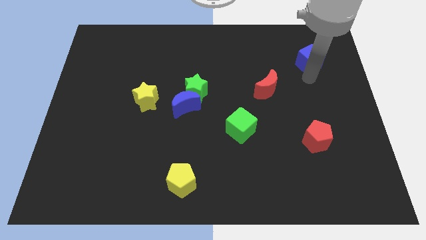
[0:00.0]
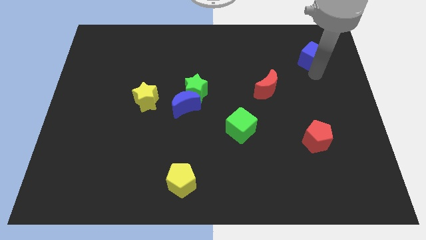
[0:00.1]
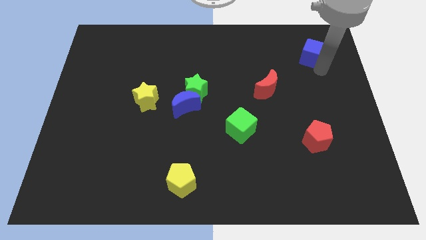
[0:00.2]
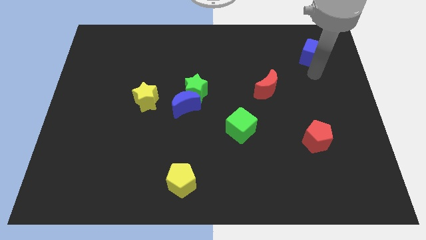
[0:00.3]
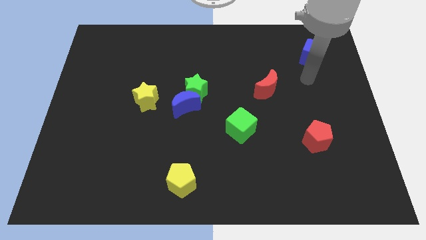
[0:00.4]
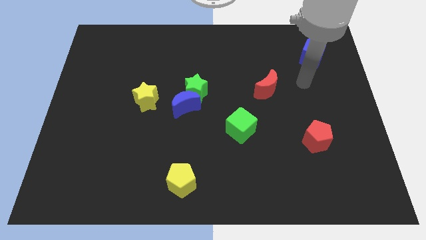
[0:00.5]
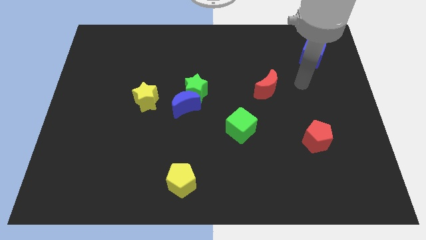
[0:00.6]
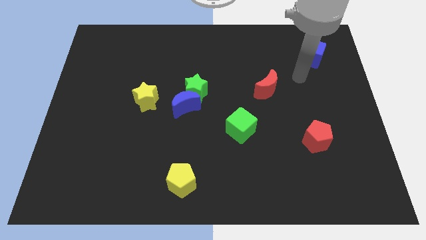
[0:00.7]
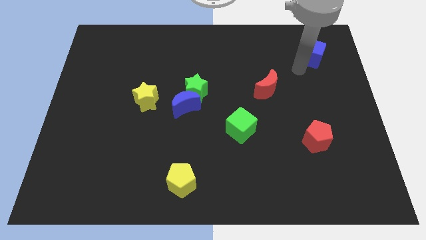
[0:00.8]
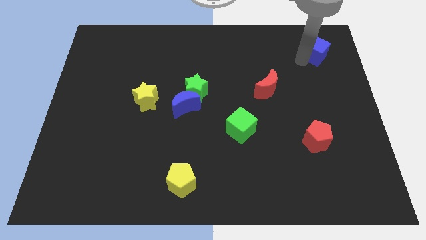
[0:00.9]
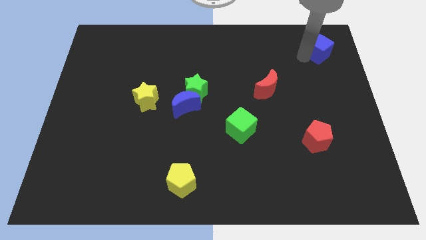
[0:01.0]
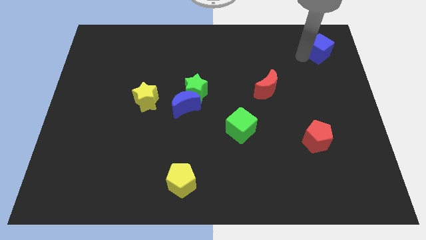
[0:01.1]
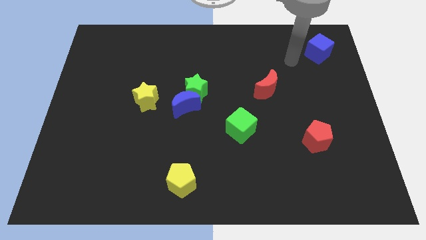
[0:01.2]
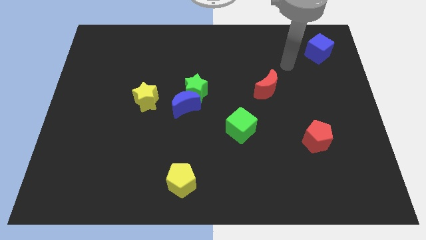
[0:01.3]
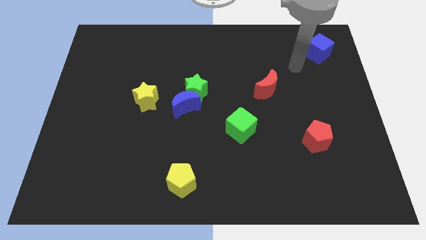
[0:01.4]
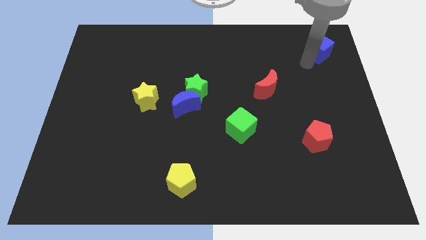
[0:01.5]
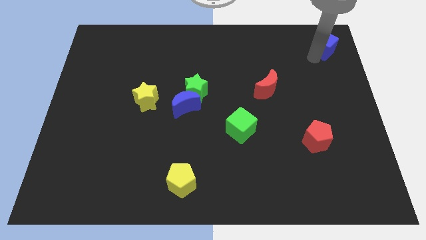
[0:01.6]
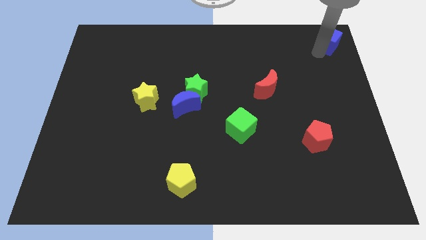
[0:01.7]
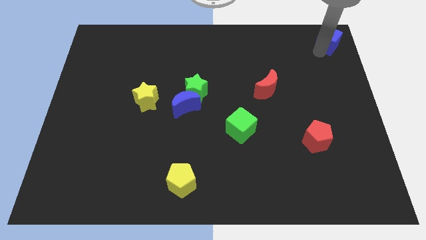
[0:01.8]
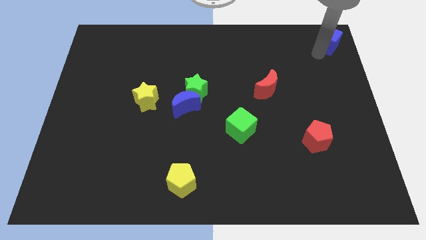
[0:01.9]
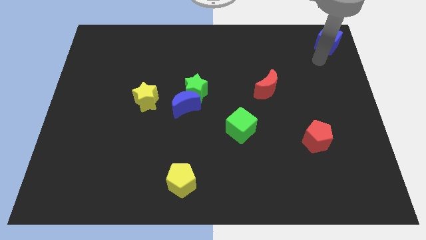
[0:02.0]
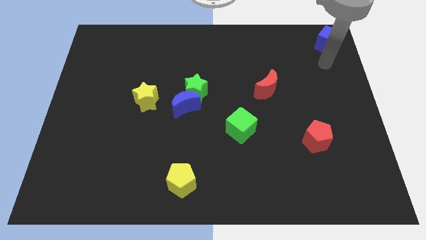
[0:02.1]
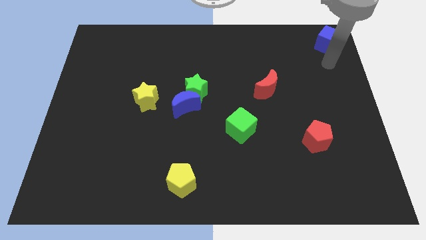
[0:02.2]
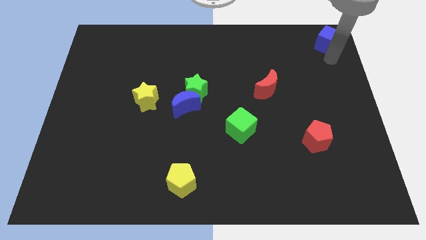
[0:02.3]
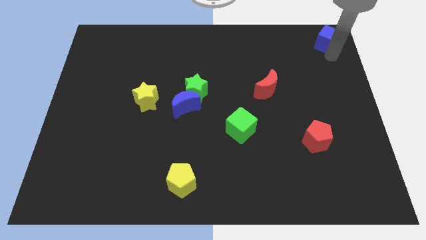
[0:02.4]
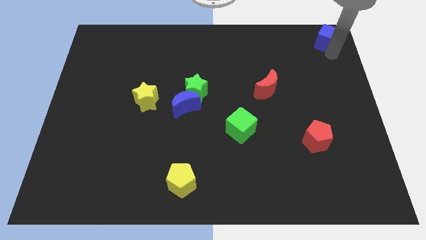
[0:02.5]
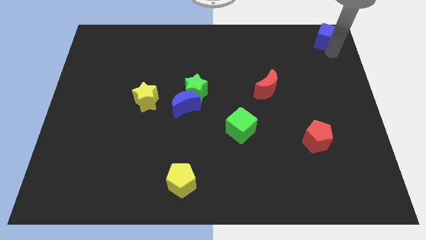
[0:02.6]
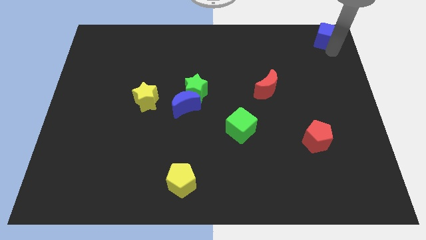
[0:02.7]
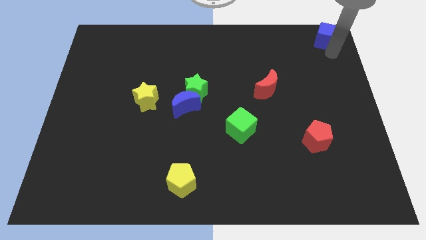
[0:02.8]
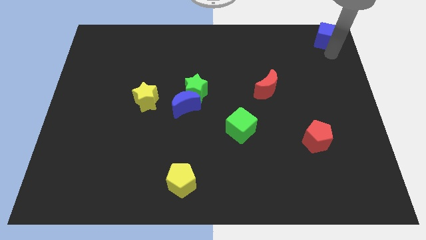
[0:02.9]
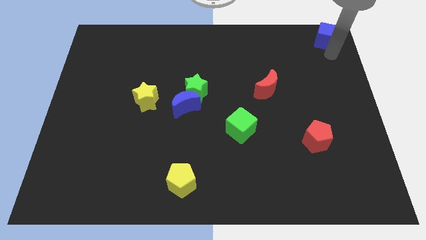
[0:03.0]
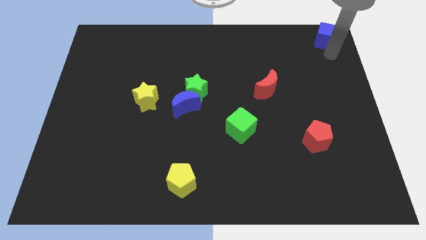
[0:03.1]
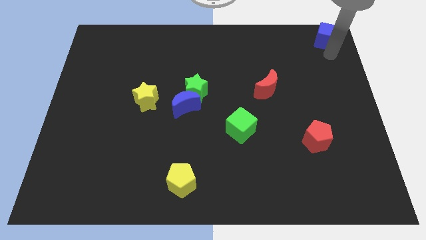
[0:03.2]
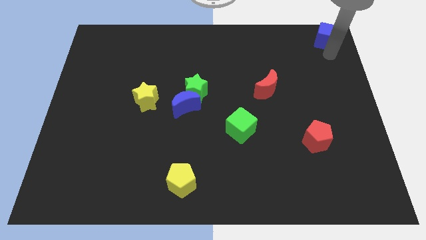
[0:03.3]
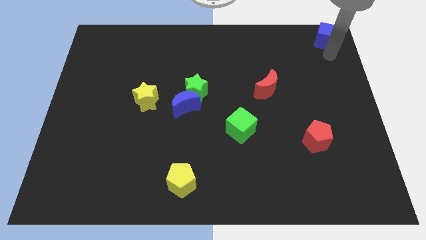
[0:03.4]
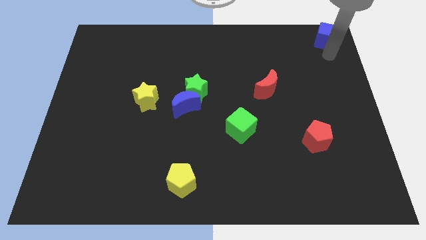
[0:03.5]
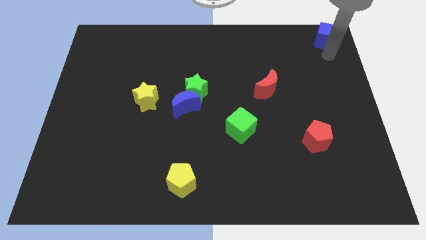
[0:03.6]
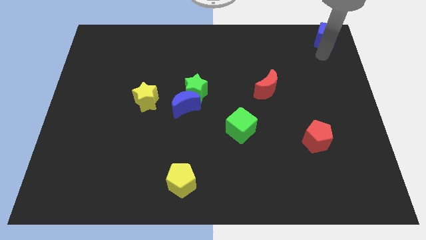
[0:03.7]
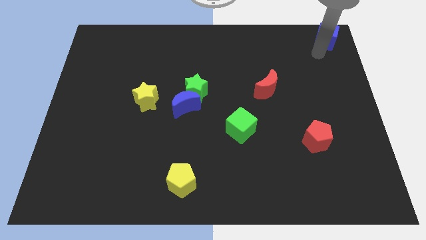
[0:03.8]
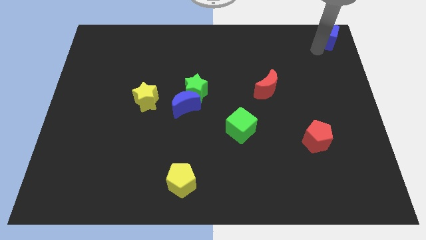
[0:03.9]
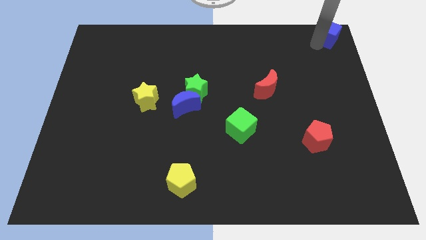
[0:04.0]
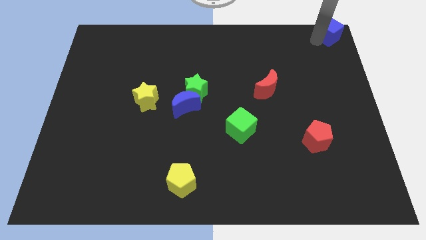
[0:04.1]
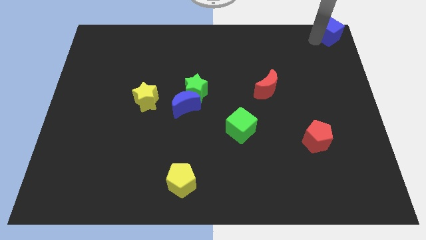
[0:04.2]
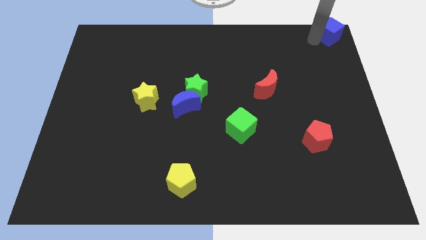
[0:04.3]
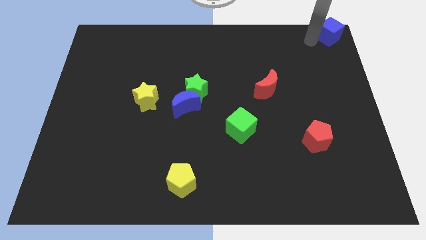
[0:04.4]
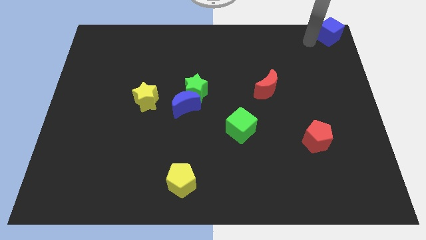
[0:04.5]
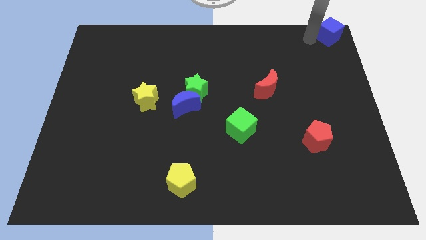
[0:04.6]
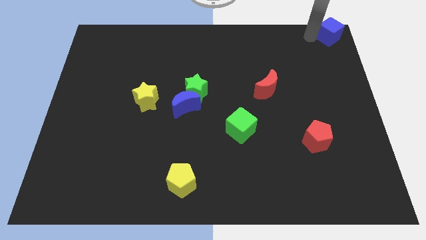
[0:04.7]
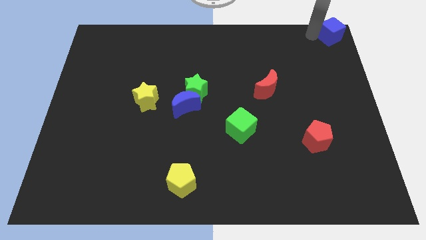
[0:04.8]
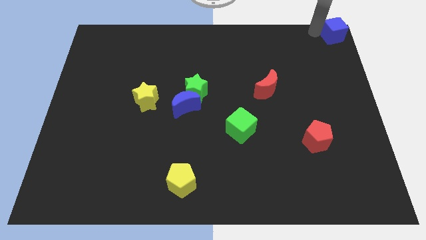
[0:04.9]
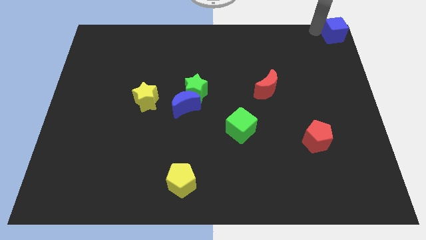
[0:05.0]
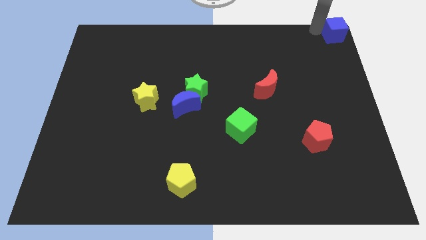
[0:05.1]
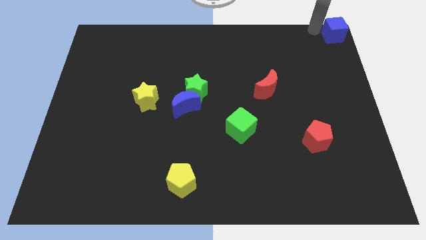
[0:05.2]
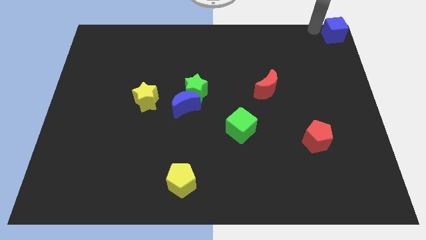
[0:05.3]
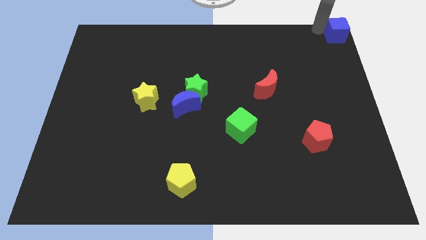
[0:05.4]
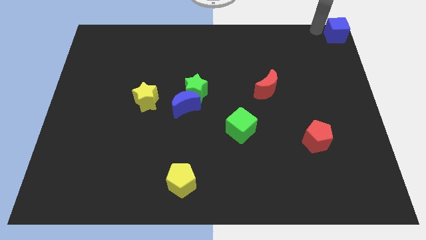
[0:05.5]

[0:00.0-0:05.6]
place the blue cube to the top right corner side

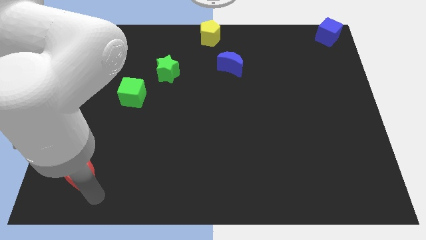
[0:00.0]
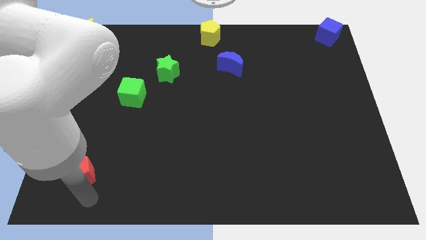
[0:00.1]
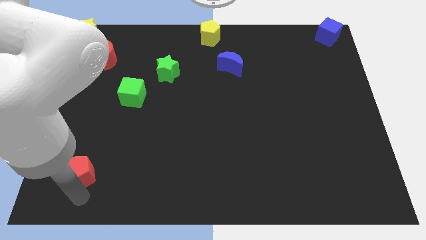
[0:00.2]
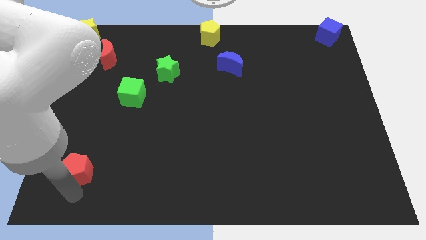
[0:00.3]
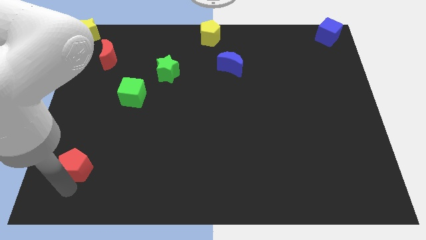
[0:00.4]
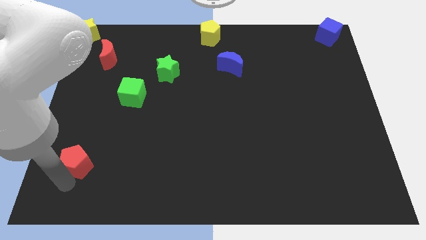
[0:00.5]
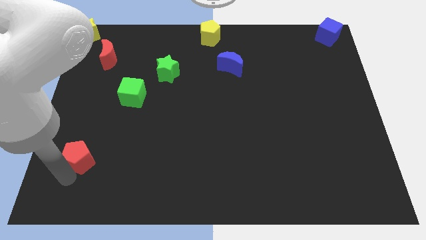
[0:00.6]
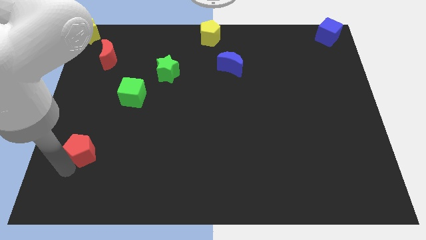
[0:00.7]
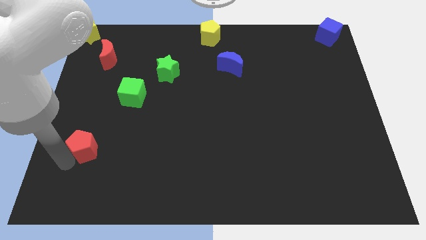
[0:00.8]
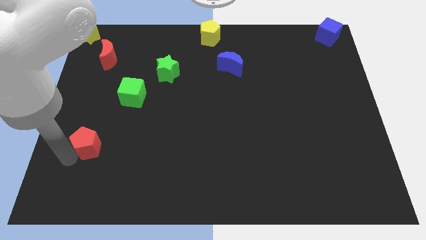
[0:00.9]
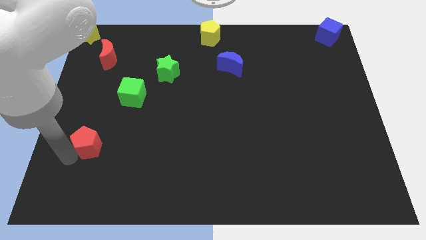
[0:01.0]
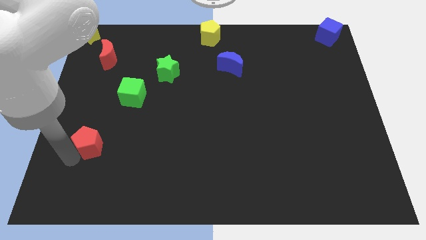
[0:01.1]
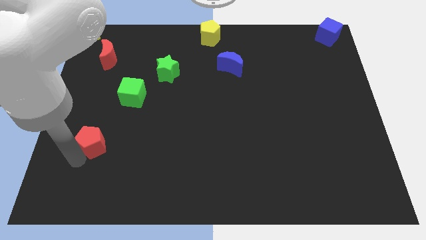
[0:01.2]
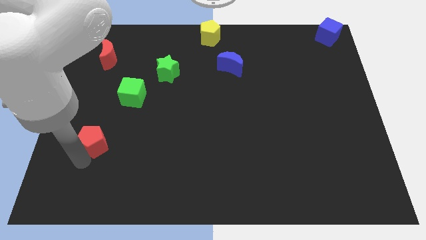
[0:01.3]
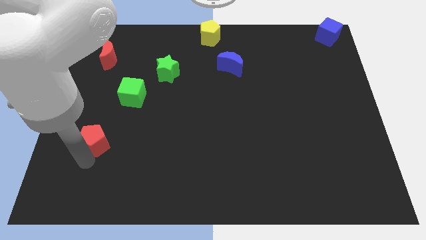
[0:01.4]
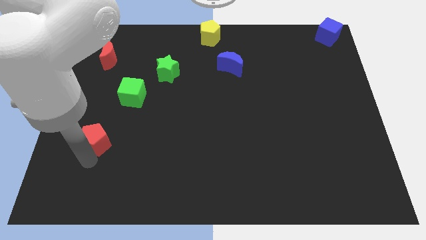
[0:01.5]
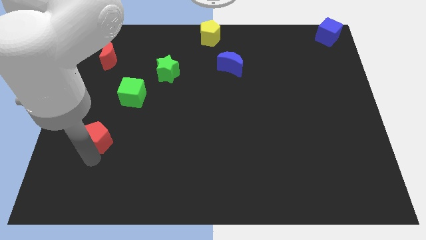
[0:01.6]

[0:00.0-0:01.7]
push the red pentagon to the bottom left of the green cube

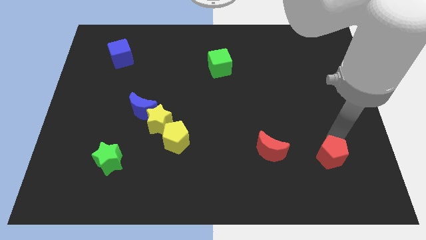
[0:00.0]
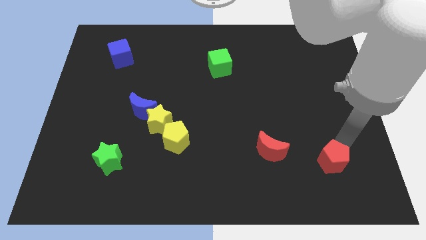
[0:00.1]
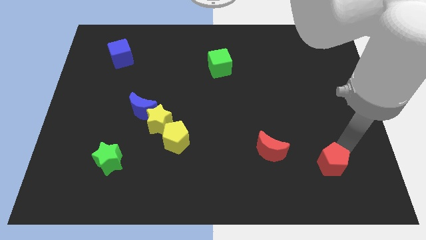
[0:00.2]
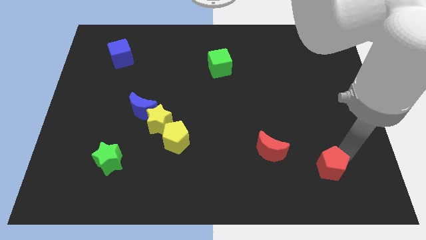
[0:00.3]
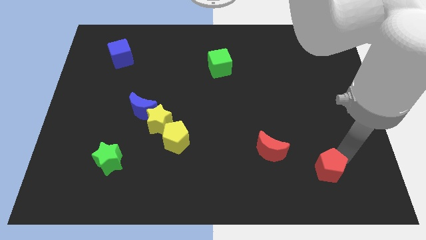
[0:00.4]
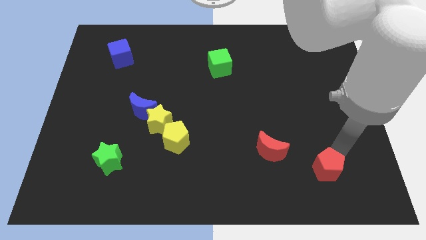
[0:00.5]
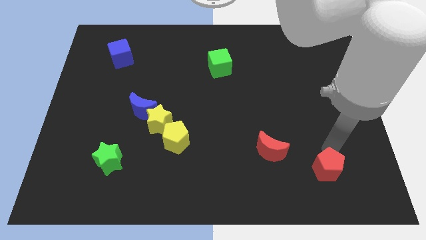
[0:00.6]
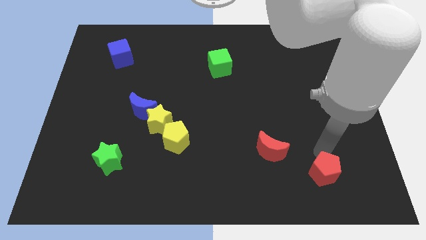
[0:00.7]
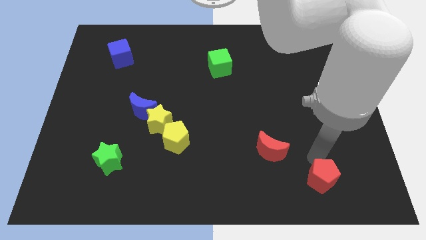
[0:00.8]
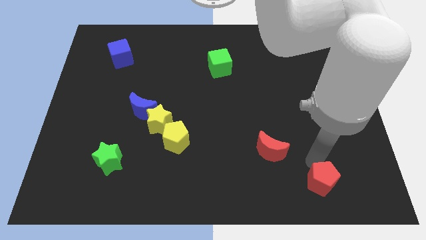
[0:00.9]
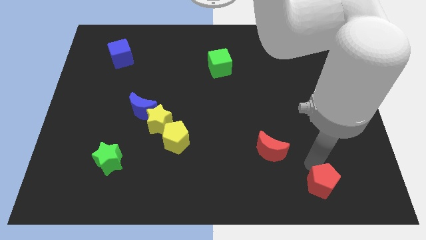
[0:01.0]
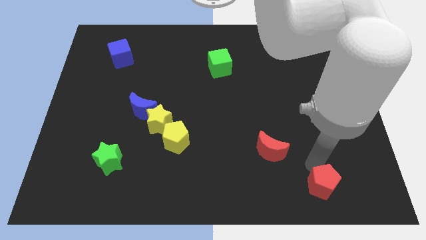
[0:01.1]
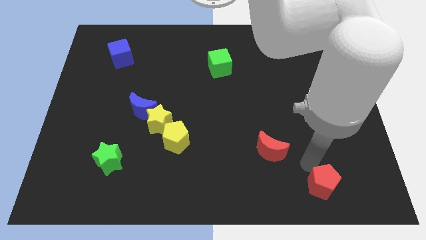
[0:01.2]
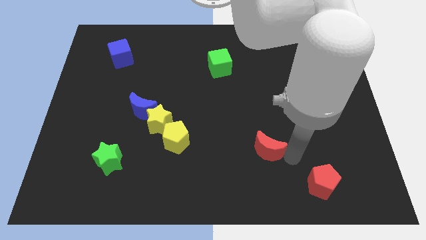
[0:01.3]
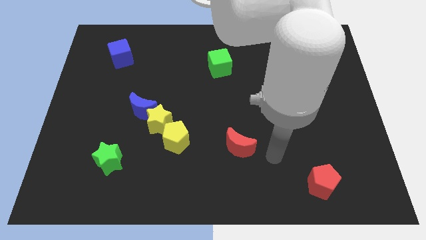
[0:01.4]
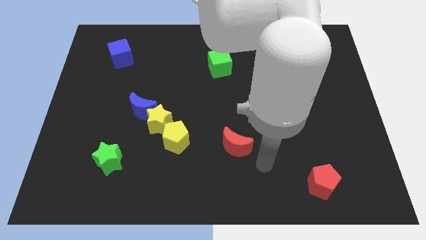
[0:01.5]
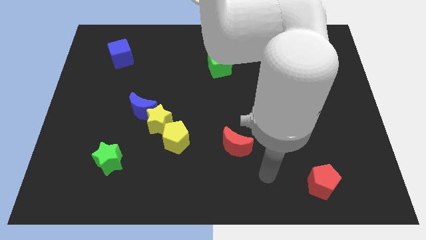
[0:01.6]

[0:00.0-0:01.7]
push the red pentagon towards the bottom right of the board

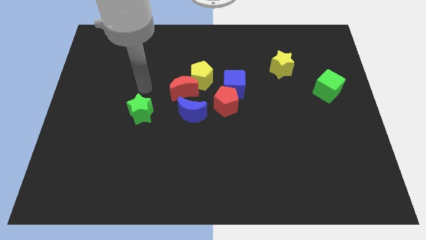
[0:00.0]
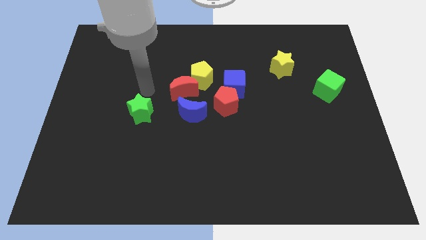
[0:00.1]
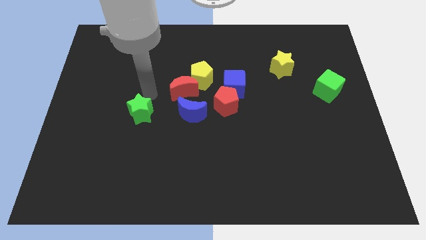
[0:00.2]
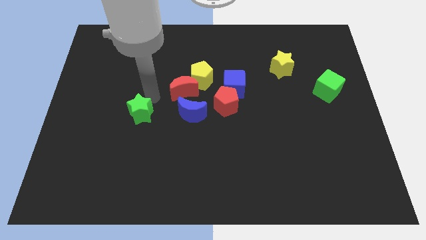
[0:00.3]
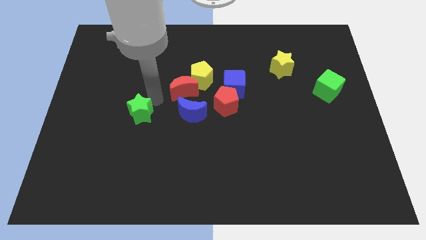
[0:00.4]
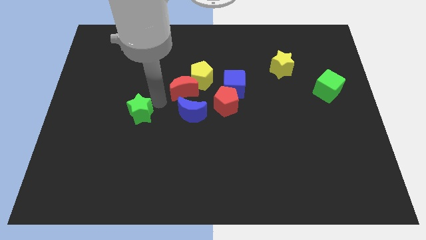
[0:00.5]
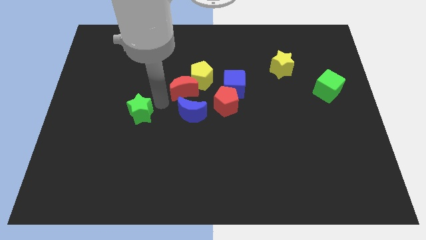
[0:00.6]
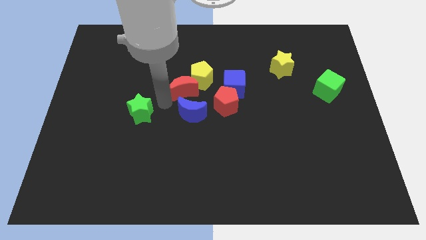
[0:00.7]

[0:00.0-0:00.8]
point your arm at the right of the green star
